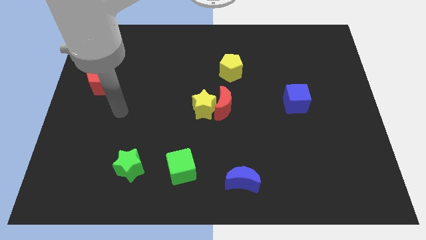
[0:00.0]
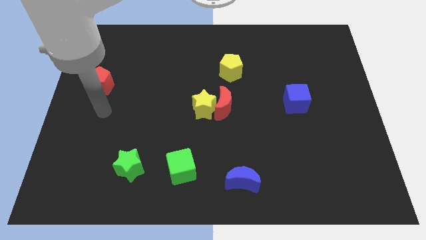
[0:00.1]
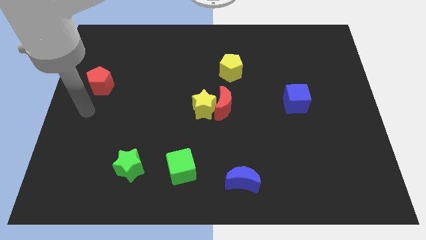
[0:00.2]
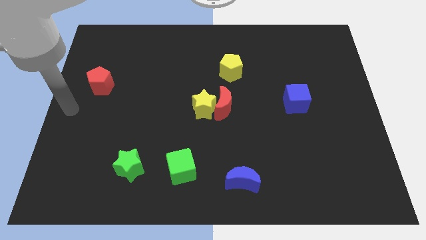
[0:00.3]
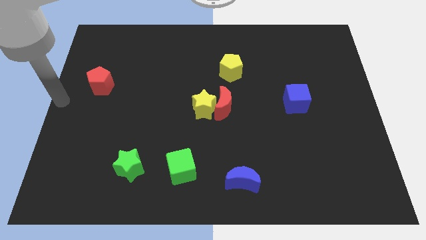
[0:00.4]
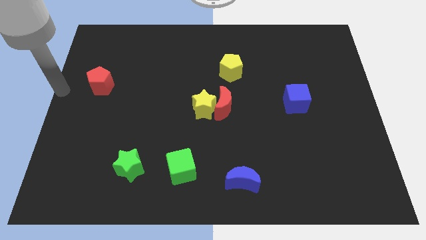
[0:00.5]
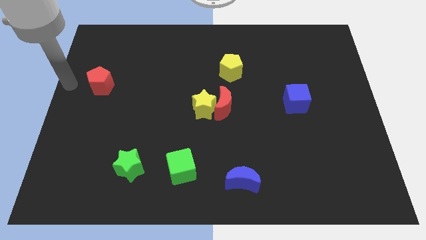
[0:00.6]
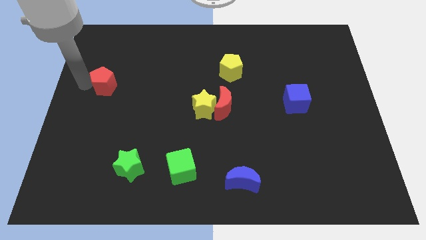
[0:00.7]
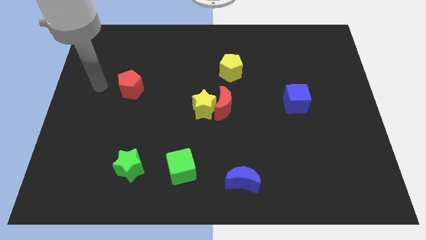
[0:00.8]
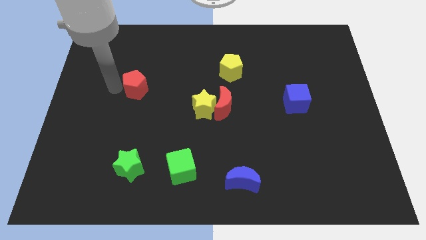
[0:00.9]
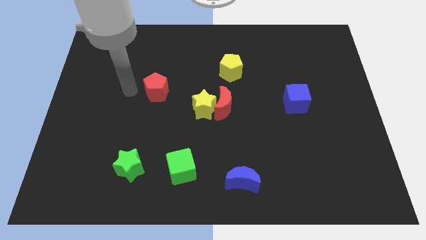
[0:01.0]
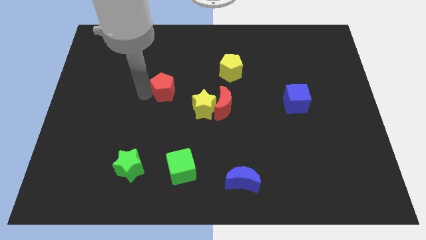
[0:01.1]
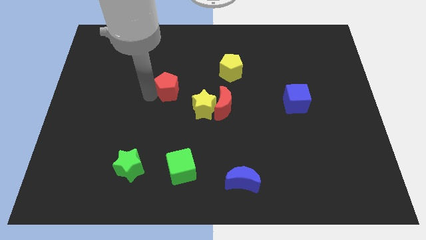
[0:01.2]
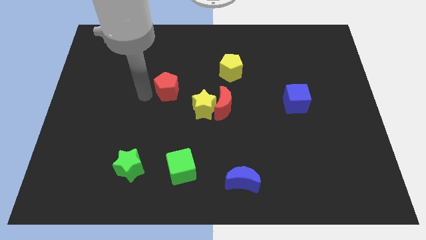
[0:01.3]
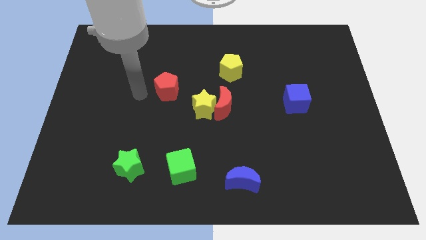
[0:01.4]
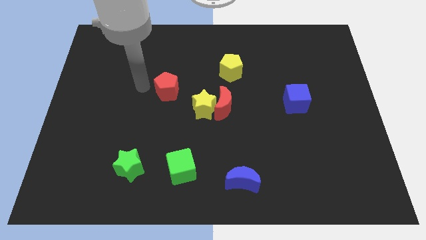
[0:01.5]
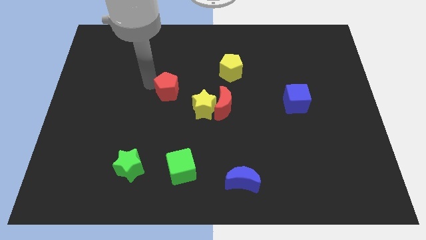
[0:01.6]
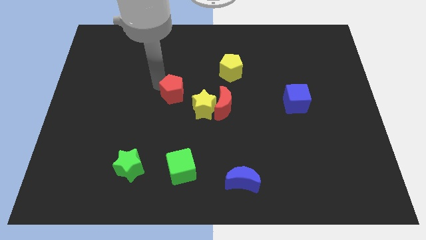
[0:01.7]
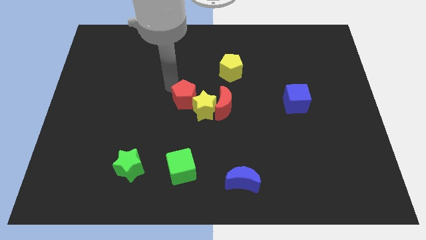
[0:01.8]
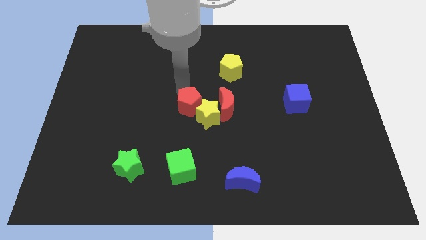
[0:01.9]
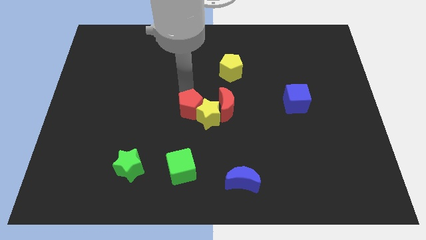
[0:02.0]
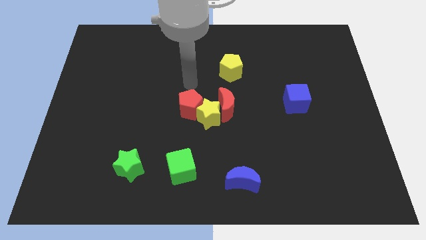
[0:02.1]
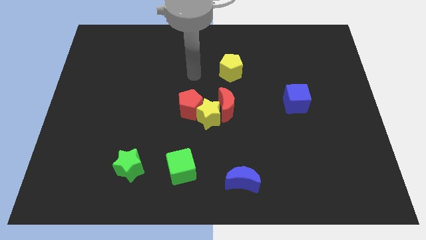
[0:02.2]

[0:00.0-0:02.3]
move red pentagon left above the yellow star

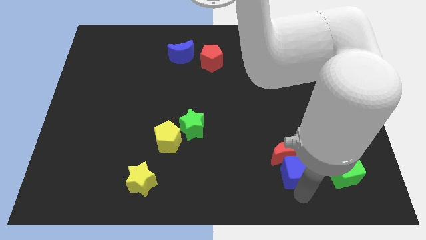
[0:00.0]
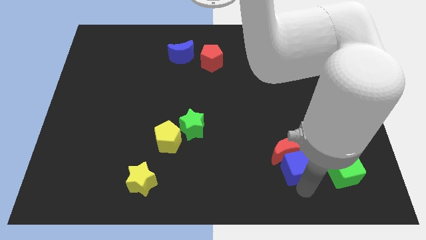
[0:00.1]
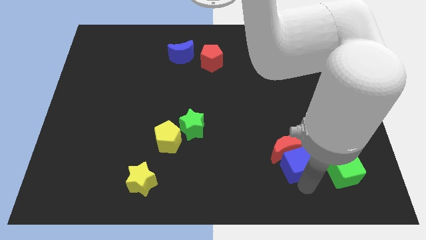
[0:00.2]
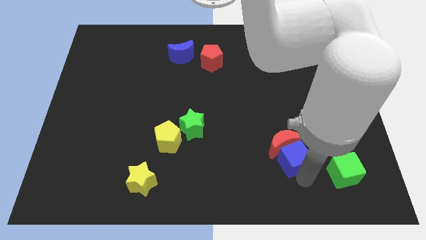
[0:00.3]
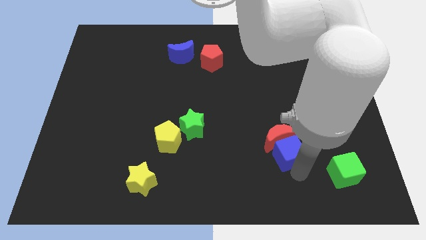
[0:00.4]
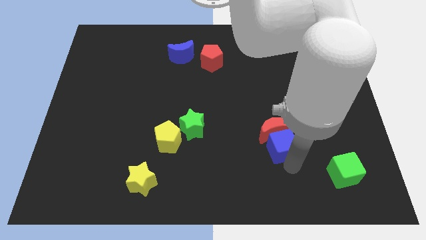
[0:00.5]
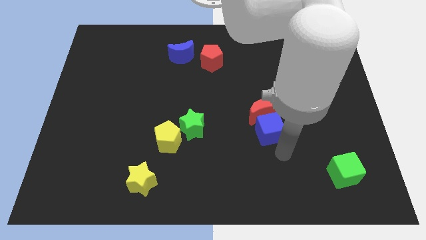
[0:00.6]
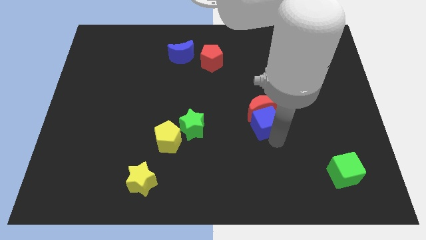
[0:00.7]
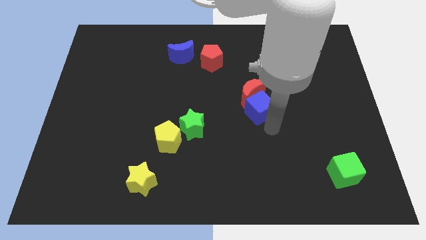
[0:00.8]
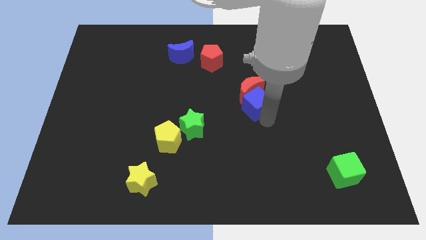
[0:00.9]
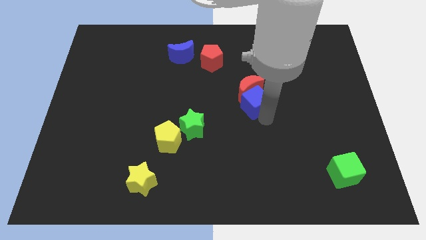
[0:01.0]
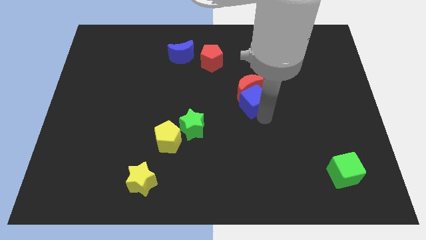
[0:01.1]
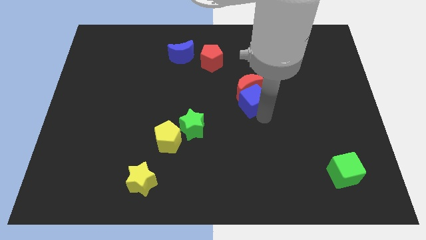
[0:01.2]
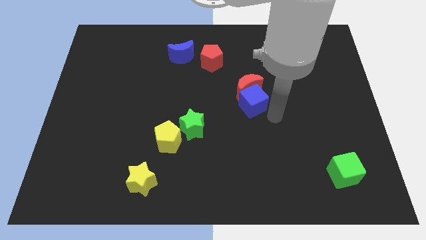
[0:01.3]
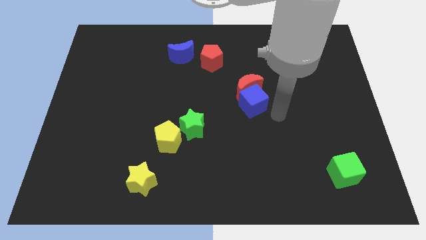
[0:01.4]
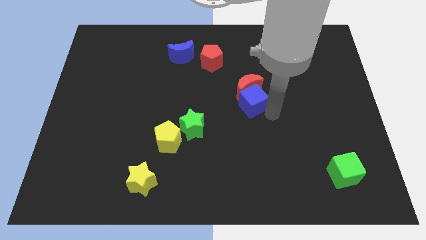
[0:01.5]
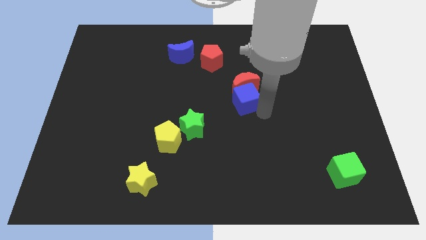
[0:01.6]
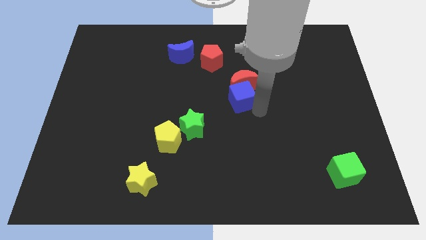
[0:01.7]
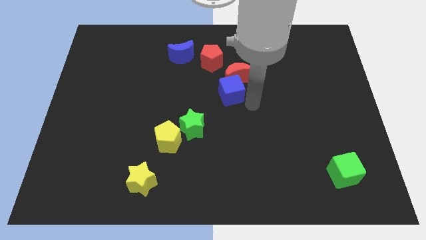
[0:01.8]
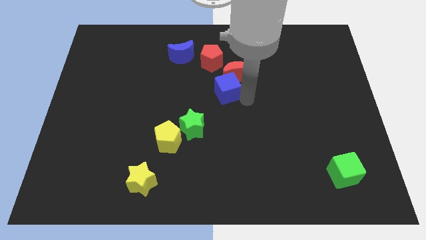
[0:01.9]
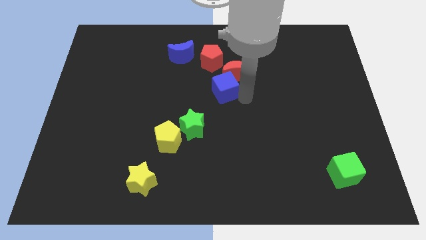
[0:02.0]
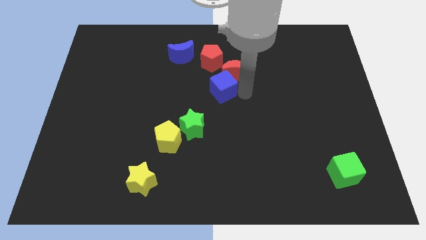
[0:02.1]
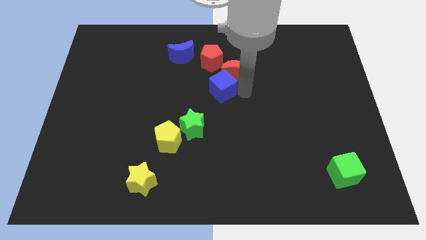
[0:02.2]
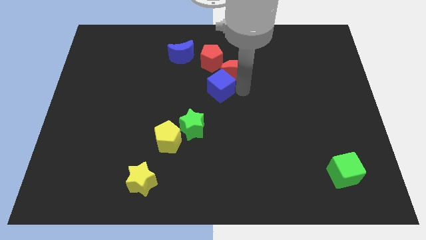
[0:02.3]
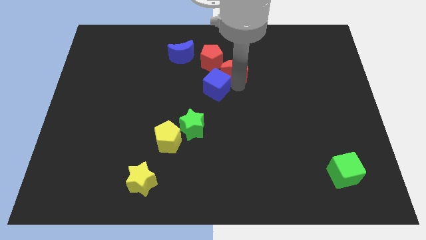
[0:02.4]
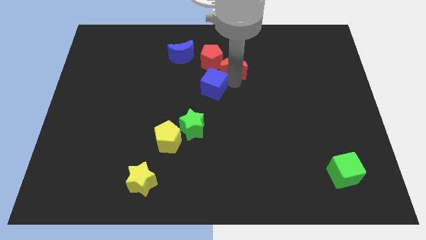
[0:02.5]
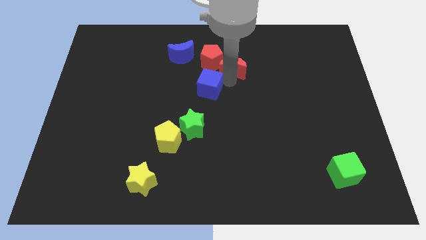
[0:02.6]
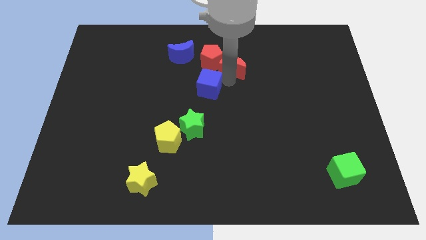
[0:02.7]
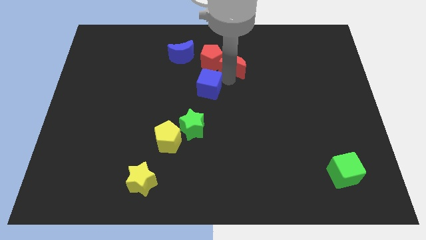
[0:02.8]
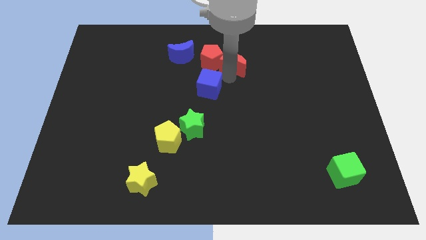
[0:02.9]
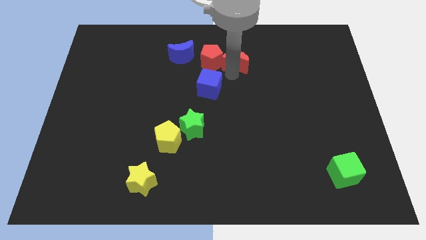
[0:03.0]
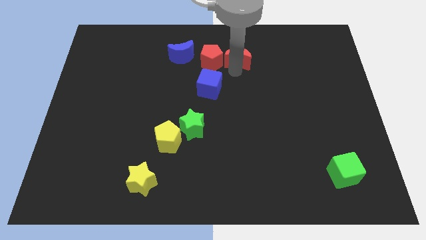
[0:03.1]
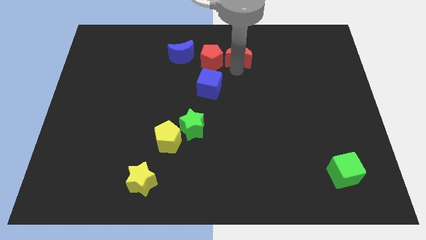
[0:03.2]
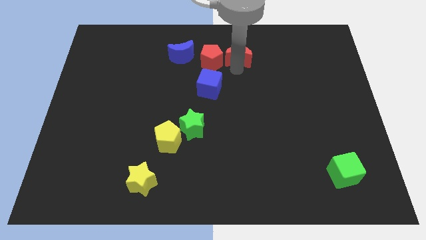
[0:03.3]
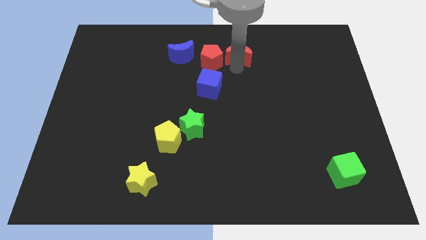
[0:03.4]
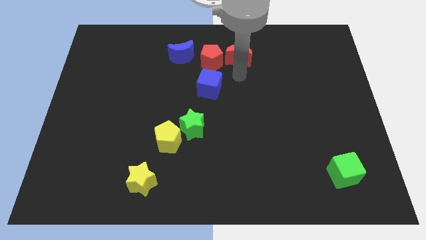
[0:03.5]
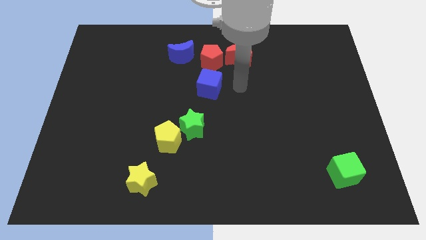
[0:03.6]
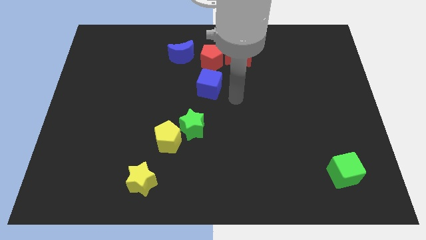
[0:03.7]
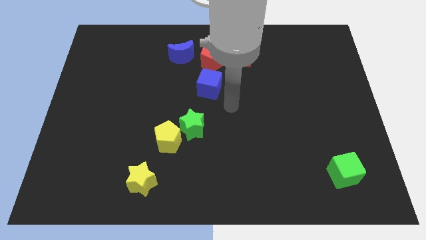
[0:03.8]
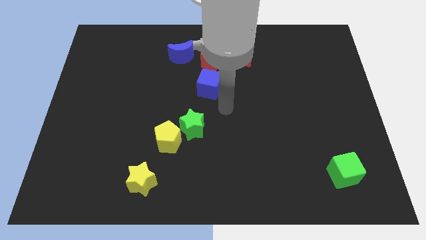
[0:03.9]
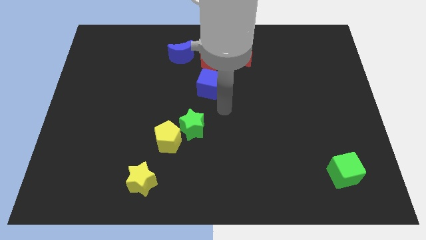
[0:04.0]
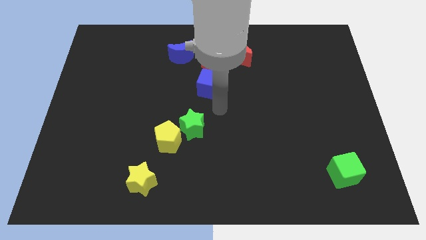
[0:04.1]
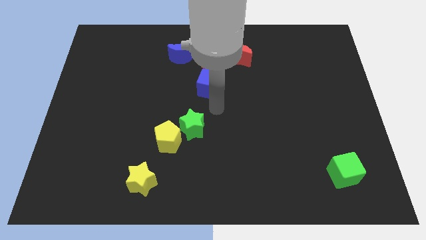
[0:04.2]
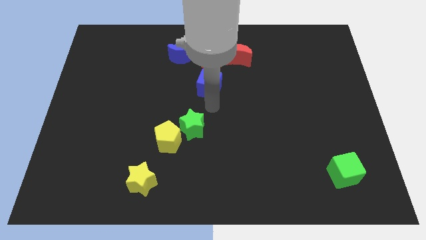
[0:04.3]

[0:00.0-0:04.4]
place the red moon right to the red pentagon

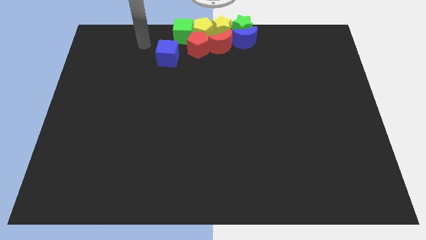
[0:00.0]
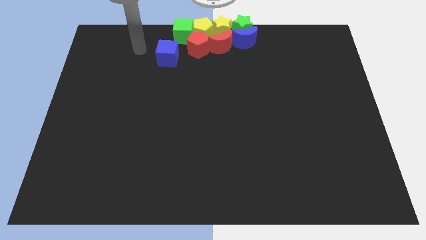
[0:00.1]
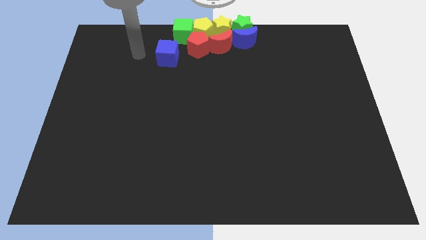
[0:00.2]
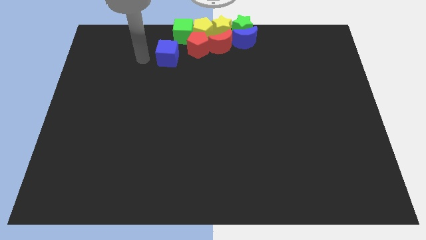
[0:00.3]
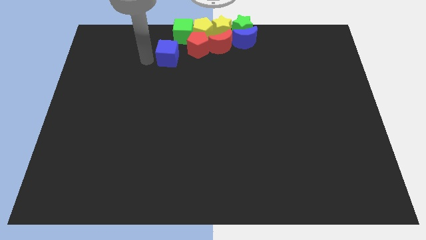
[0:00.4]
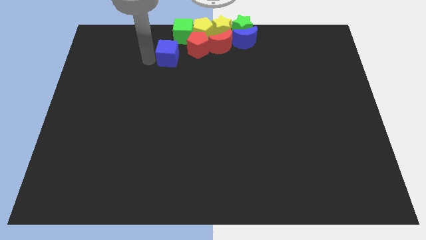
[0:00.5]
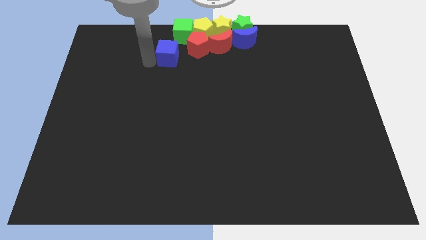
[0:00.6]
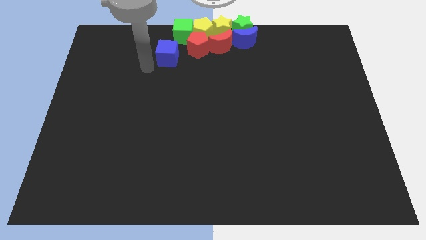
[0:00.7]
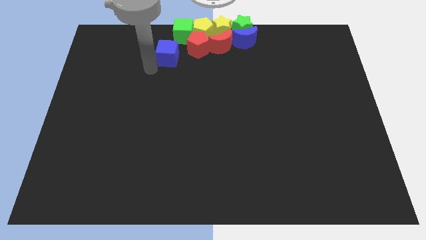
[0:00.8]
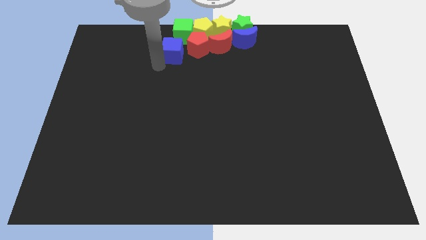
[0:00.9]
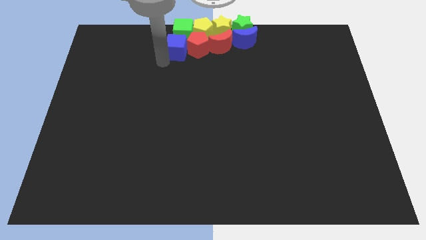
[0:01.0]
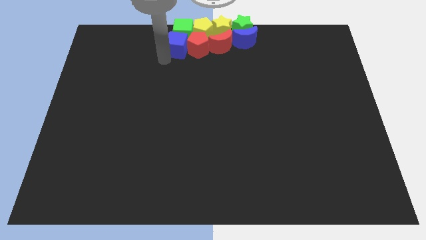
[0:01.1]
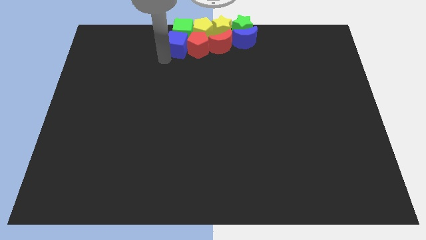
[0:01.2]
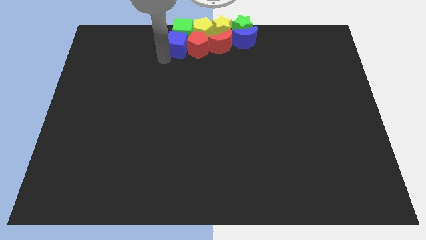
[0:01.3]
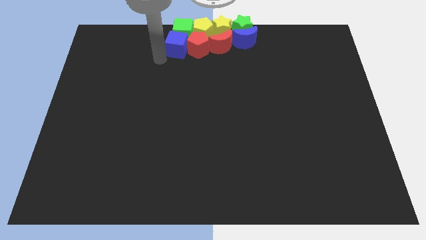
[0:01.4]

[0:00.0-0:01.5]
move the blue cube into the green cube

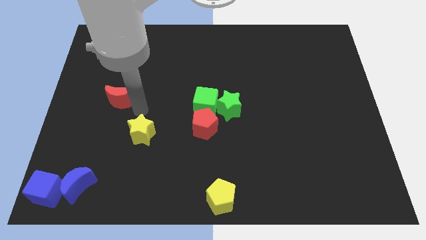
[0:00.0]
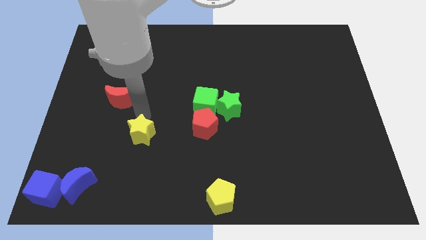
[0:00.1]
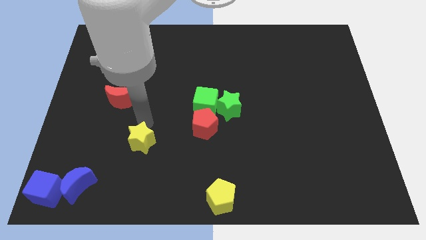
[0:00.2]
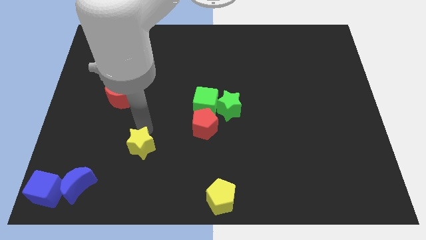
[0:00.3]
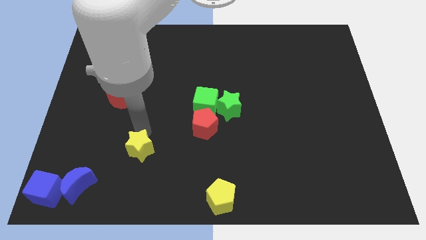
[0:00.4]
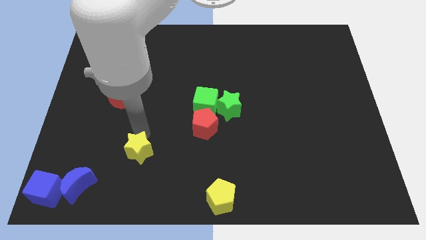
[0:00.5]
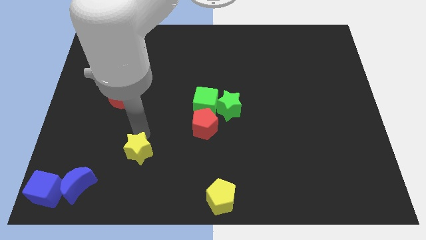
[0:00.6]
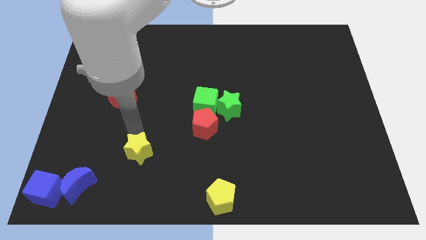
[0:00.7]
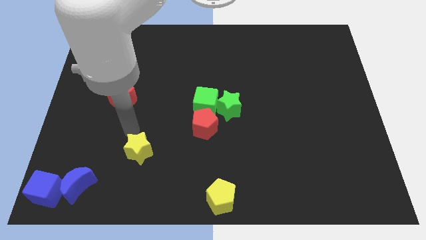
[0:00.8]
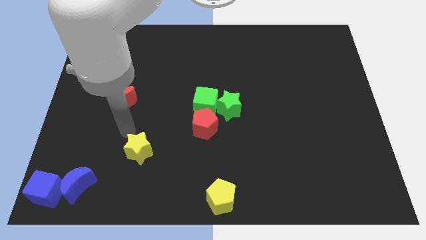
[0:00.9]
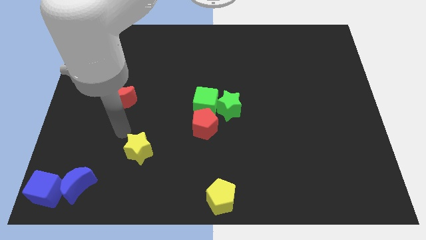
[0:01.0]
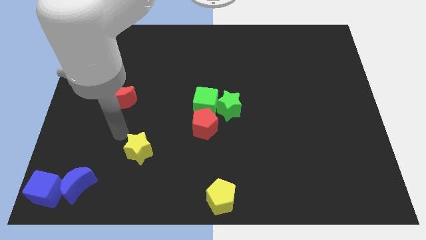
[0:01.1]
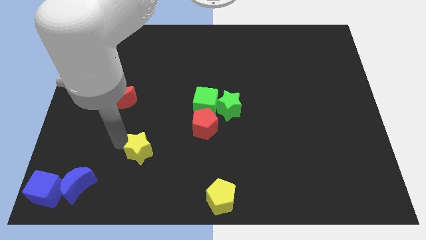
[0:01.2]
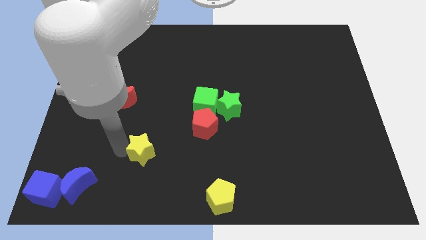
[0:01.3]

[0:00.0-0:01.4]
move the yellow star to the bottom of the board
